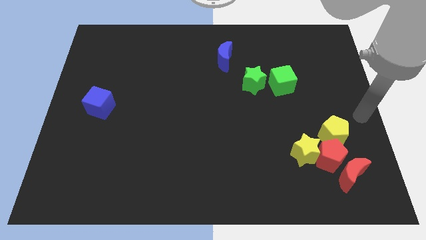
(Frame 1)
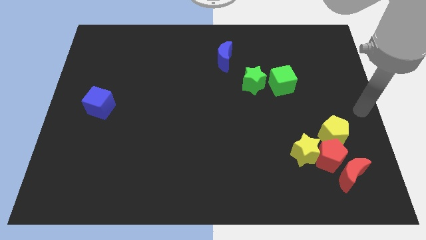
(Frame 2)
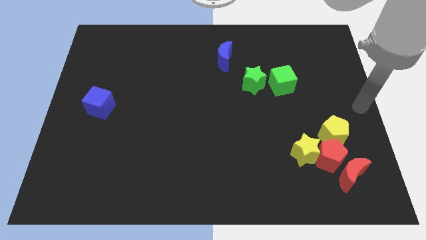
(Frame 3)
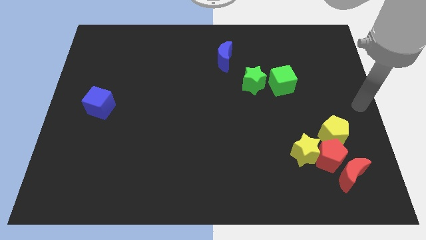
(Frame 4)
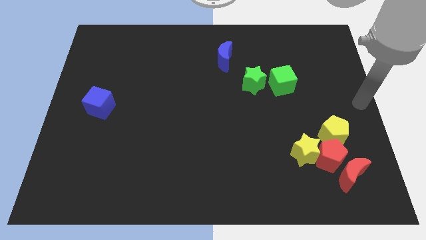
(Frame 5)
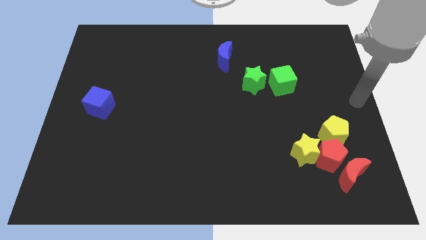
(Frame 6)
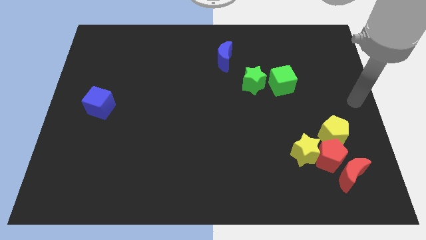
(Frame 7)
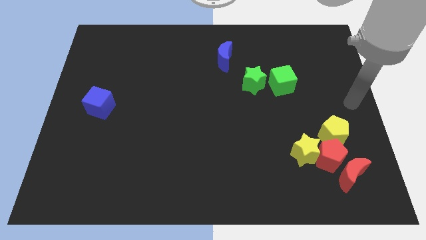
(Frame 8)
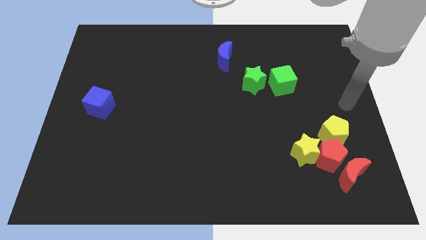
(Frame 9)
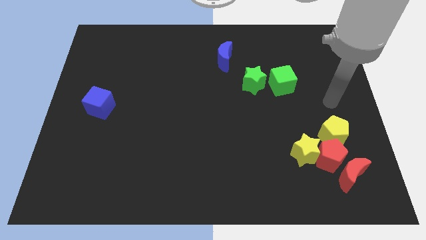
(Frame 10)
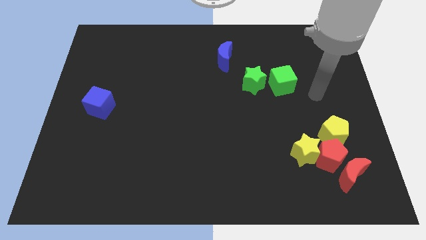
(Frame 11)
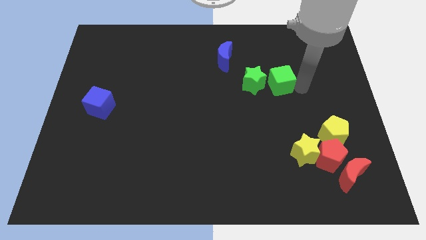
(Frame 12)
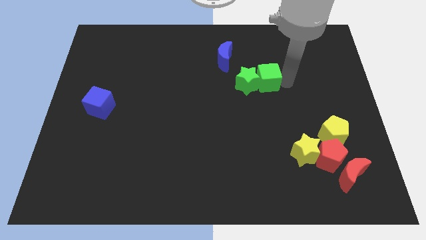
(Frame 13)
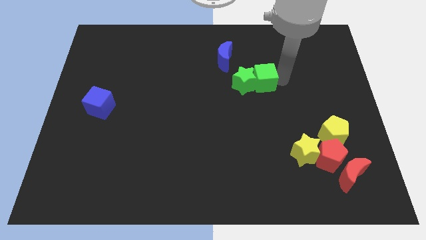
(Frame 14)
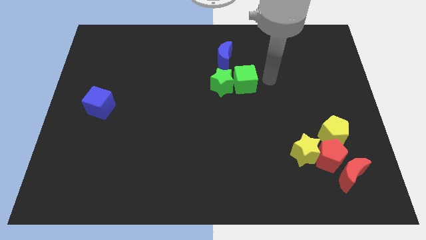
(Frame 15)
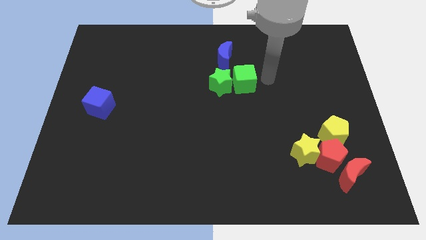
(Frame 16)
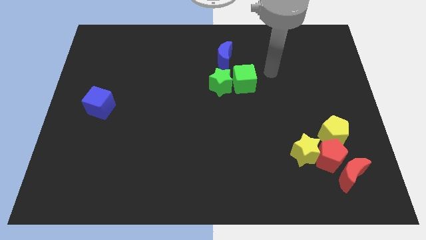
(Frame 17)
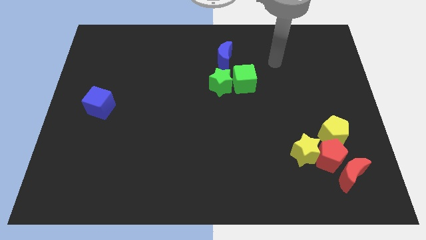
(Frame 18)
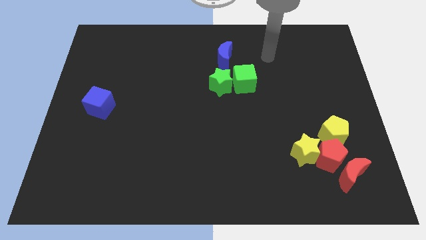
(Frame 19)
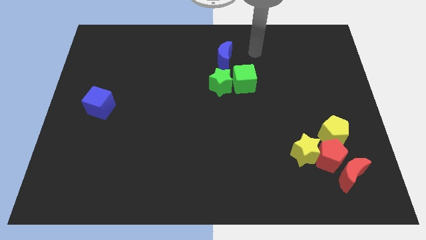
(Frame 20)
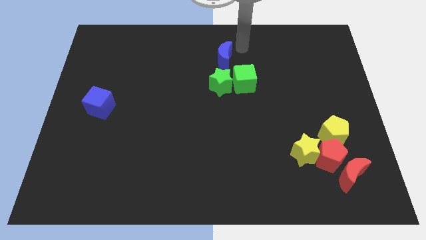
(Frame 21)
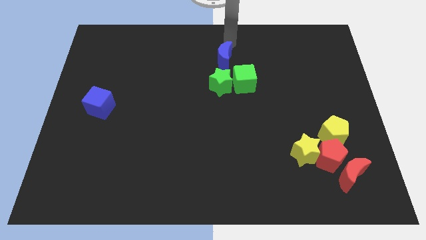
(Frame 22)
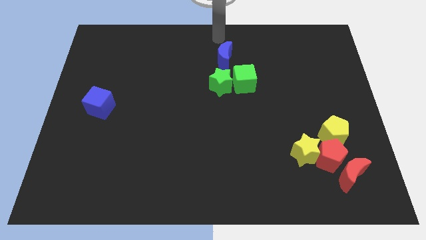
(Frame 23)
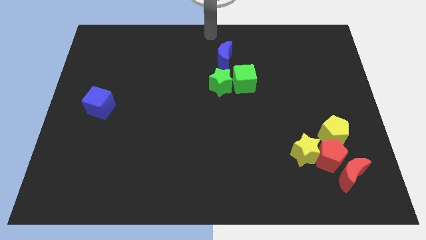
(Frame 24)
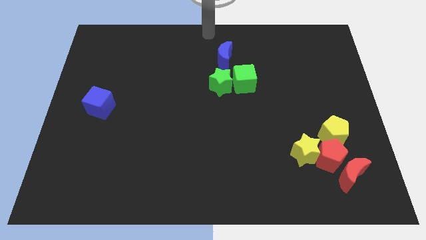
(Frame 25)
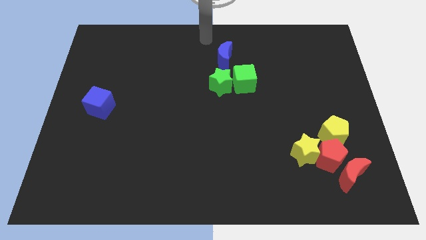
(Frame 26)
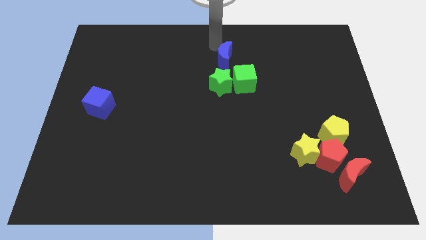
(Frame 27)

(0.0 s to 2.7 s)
place the green blocks below the blue crescent

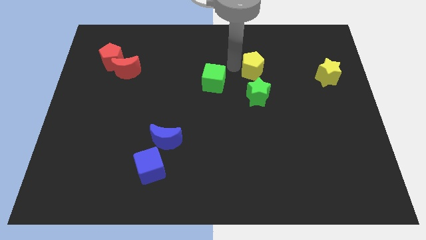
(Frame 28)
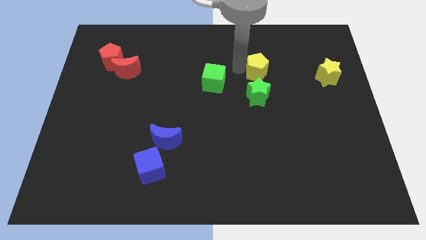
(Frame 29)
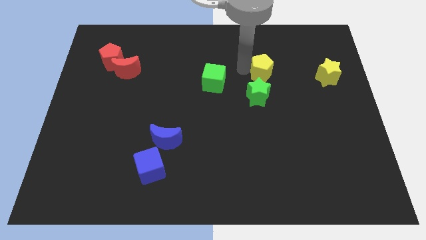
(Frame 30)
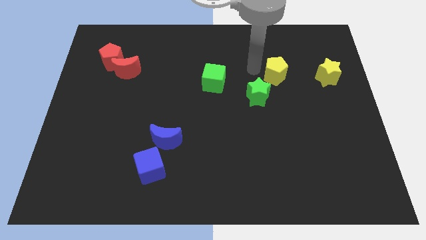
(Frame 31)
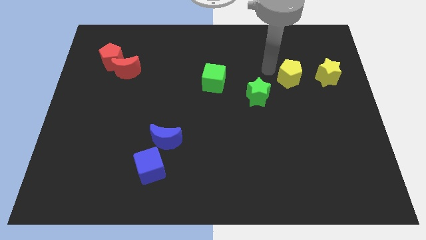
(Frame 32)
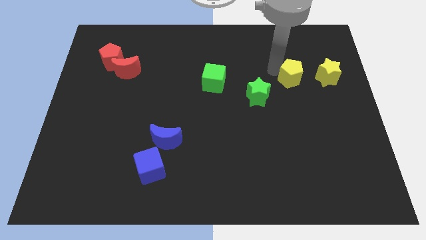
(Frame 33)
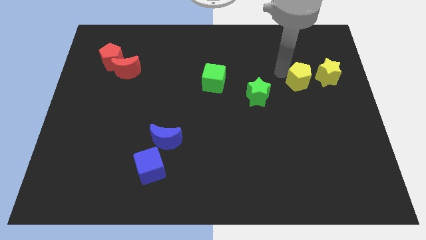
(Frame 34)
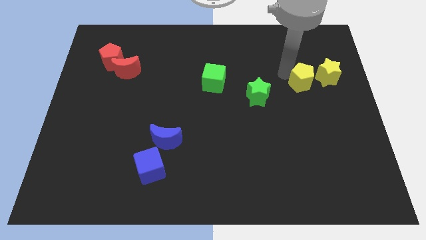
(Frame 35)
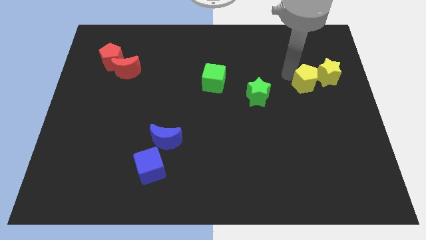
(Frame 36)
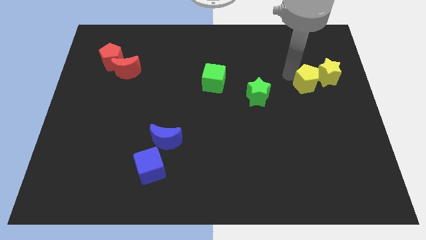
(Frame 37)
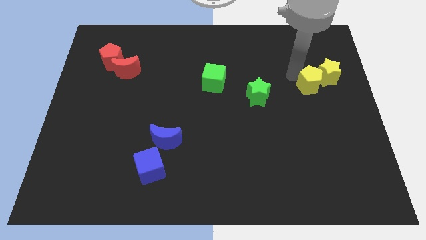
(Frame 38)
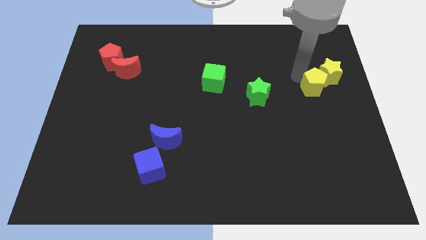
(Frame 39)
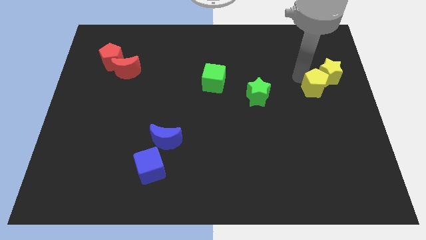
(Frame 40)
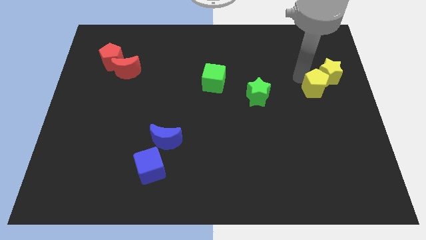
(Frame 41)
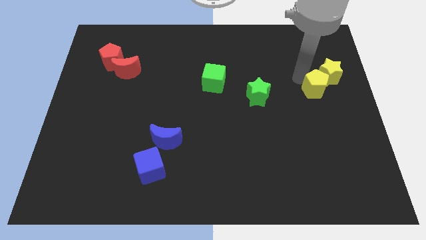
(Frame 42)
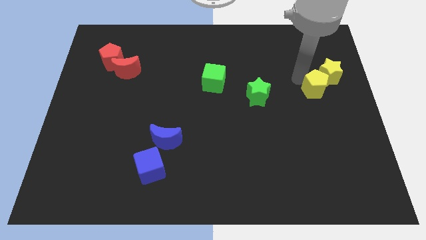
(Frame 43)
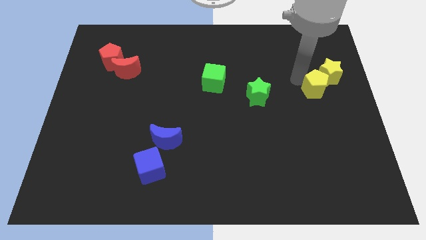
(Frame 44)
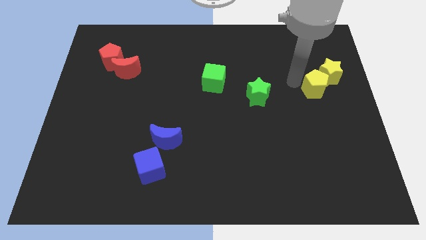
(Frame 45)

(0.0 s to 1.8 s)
move the yellow pentagon to the right of the green star

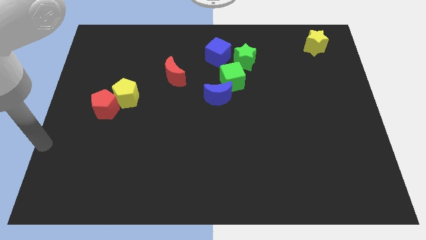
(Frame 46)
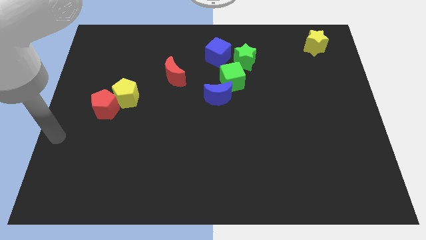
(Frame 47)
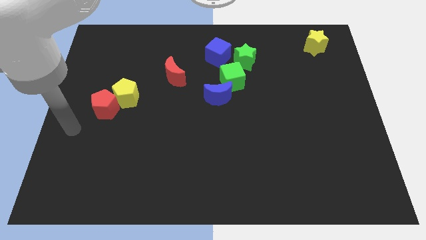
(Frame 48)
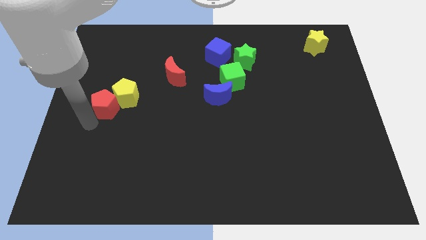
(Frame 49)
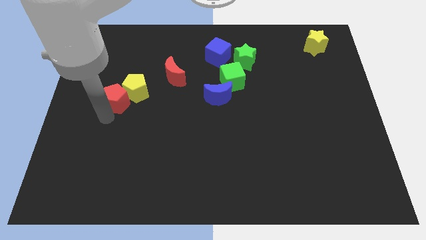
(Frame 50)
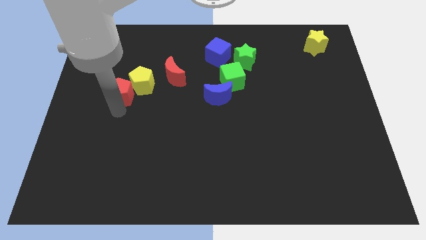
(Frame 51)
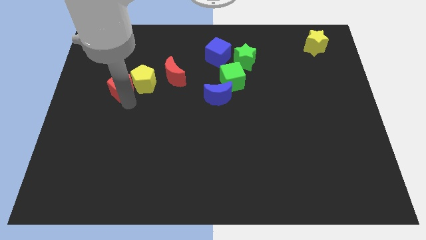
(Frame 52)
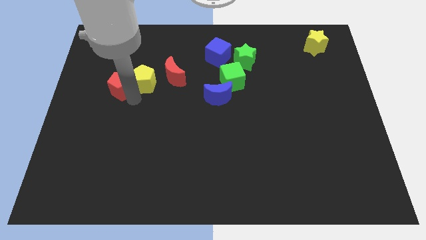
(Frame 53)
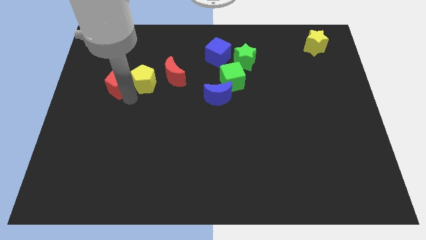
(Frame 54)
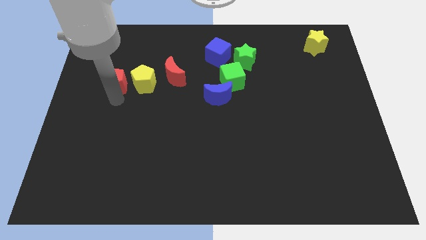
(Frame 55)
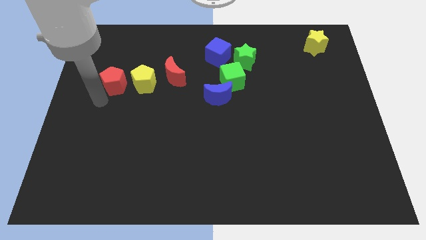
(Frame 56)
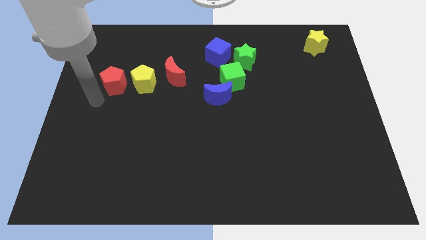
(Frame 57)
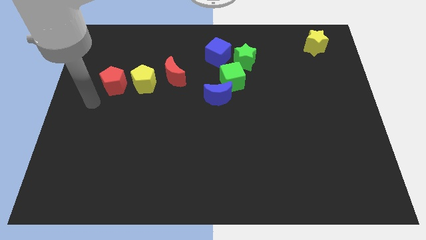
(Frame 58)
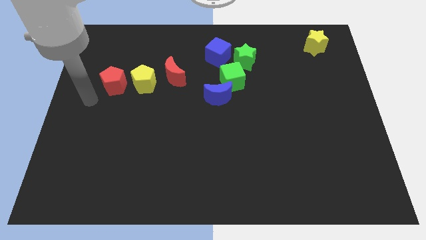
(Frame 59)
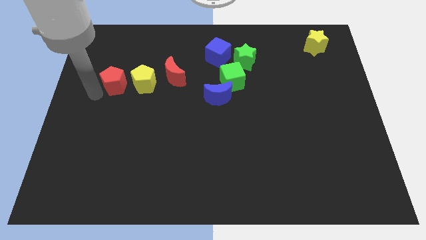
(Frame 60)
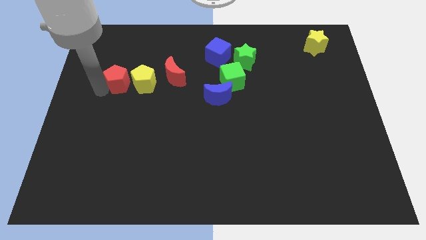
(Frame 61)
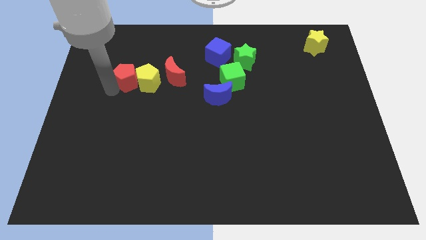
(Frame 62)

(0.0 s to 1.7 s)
move the red pentagon along with yellow pentagon towards the left of red crescent

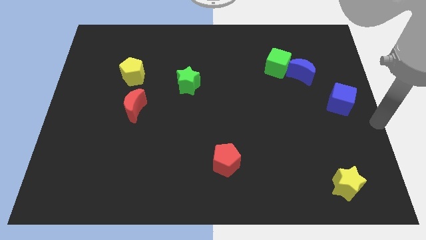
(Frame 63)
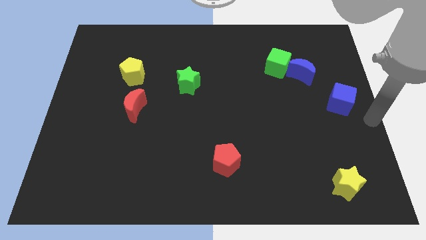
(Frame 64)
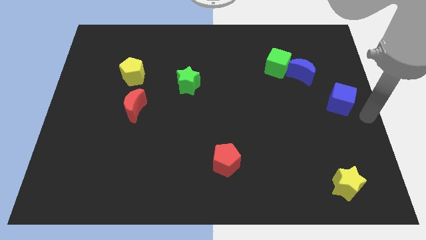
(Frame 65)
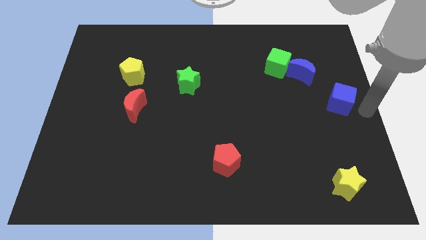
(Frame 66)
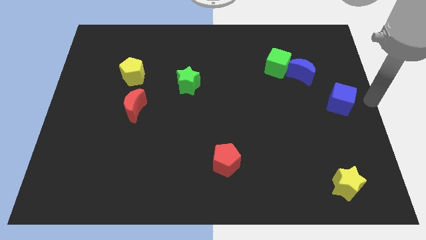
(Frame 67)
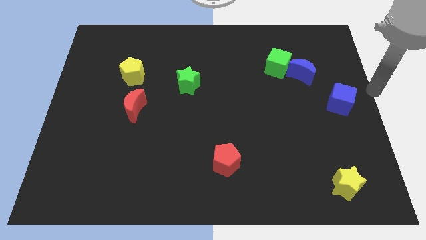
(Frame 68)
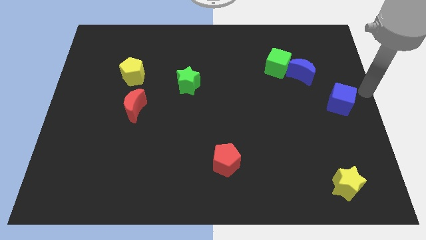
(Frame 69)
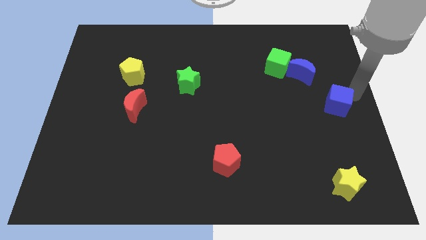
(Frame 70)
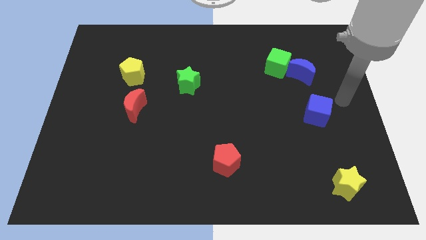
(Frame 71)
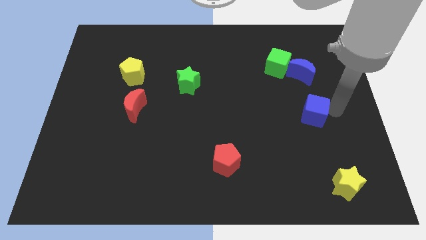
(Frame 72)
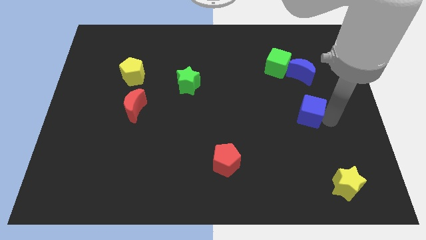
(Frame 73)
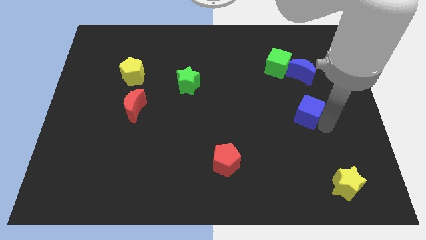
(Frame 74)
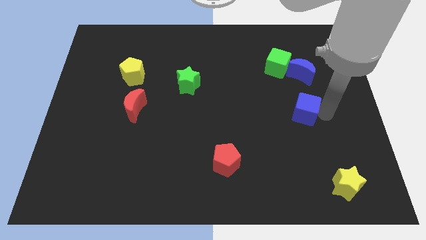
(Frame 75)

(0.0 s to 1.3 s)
push the blue cube underneath the blue crescent

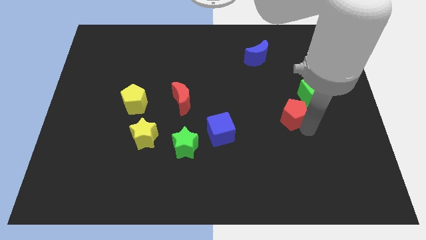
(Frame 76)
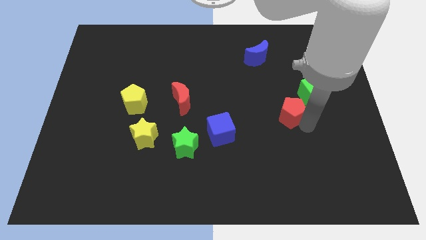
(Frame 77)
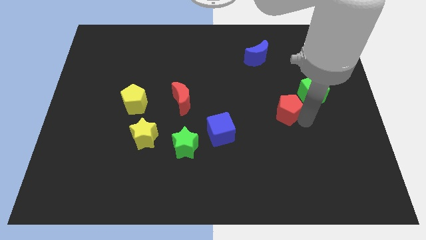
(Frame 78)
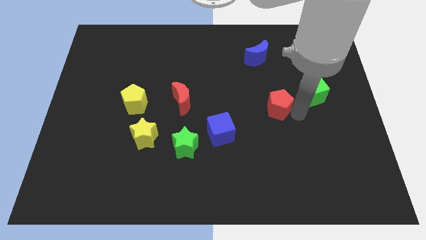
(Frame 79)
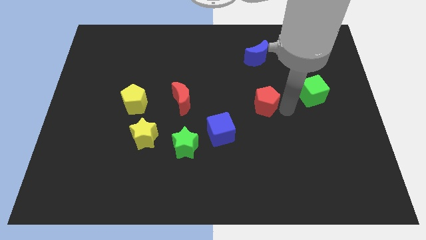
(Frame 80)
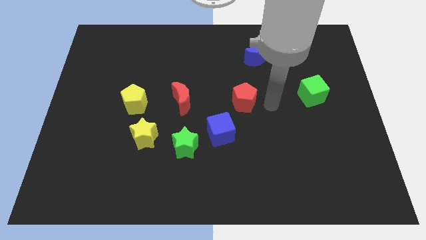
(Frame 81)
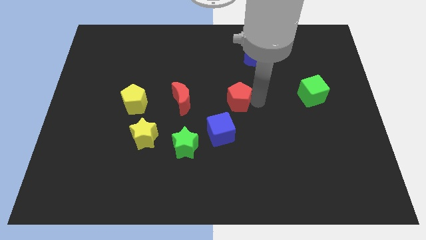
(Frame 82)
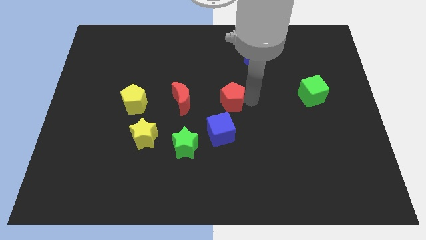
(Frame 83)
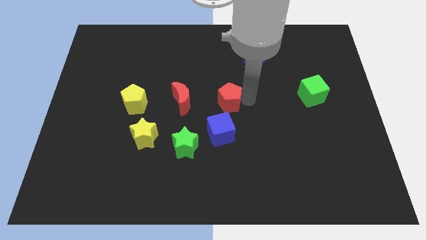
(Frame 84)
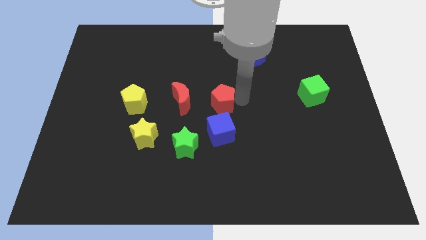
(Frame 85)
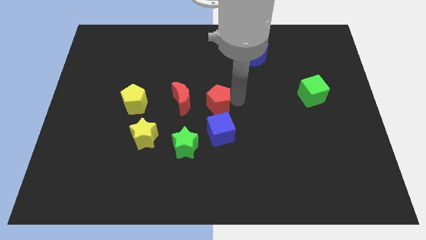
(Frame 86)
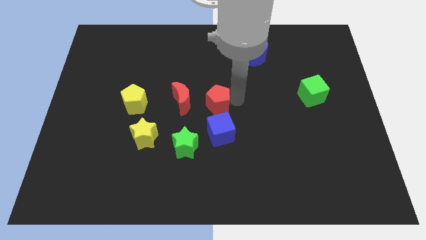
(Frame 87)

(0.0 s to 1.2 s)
place the red pentagon above the blue cube

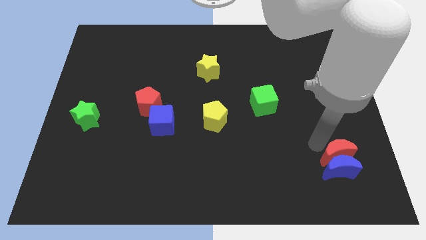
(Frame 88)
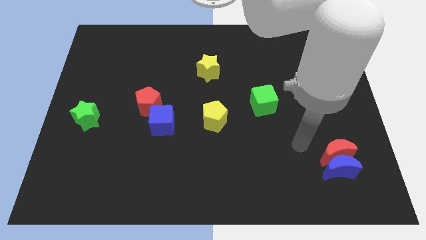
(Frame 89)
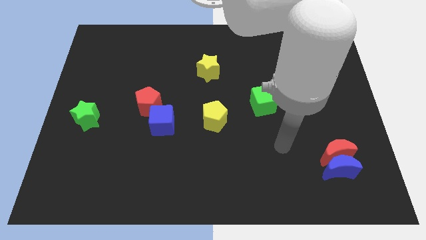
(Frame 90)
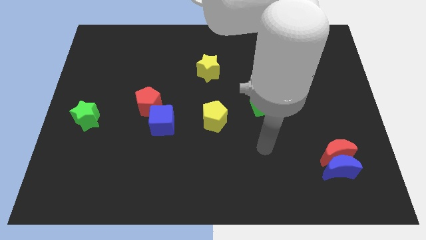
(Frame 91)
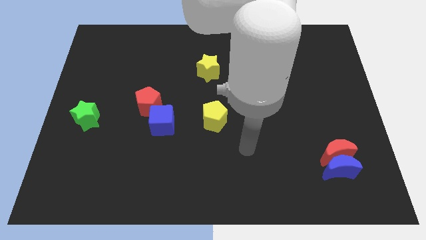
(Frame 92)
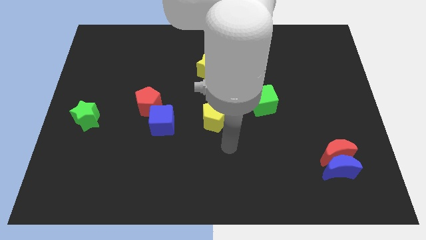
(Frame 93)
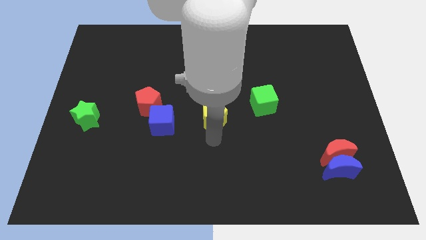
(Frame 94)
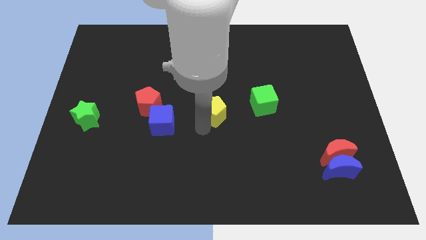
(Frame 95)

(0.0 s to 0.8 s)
move your arm away from the red crescent
